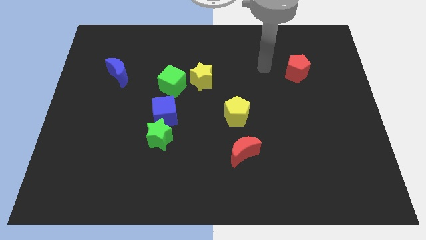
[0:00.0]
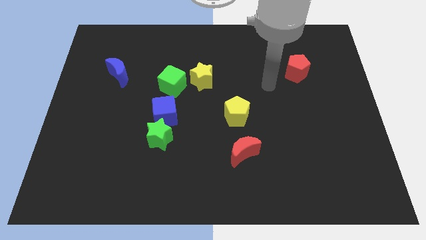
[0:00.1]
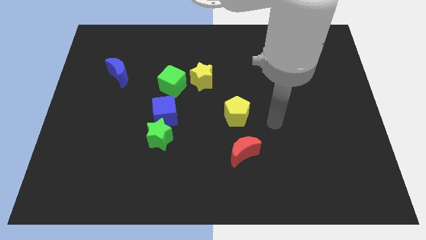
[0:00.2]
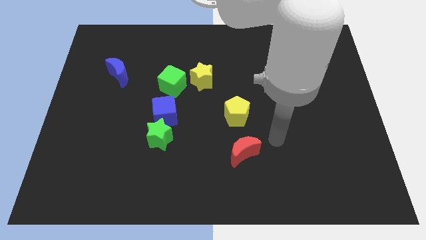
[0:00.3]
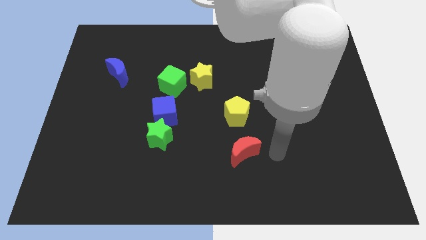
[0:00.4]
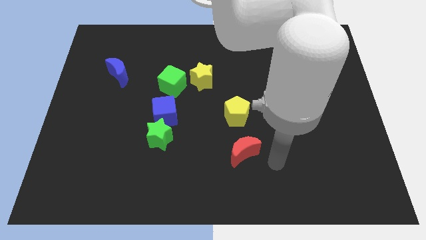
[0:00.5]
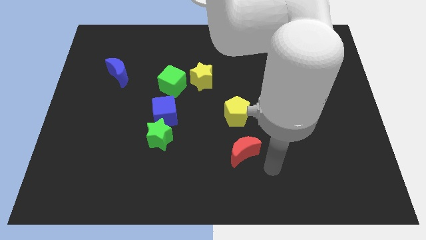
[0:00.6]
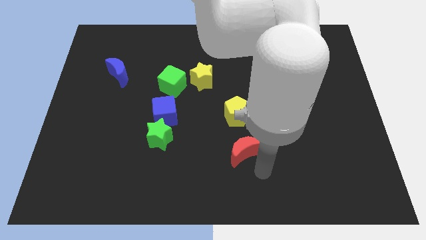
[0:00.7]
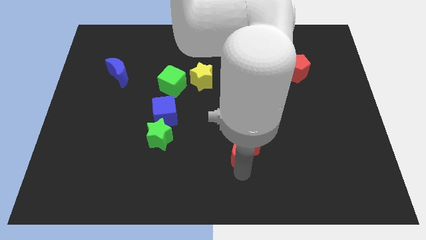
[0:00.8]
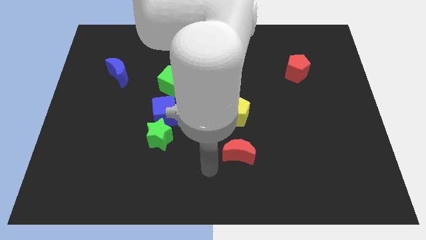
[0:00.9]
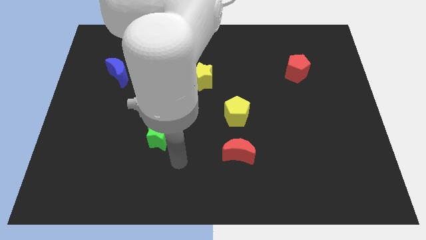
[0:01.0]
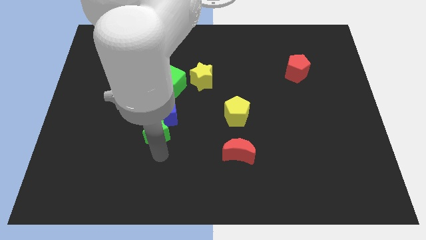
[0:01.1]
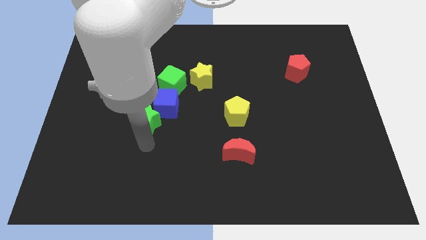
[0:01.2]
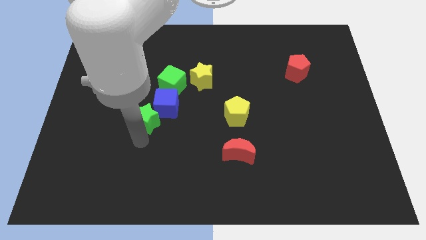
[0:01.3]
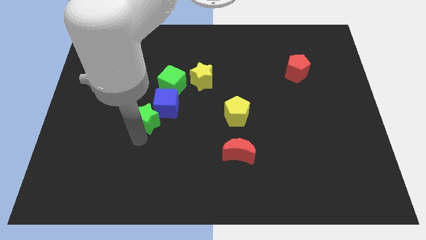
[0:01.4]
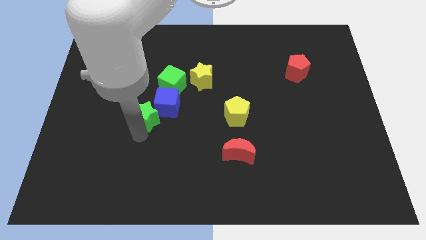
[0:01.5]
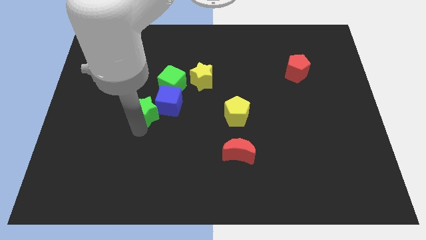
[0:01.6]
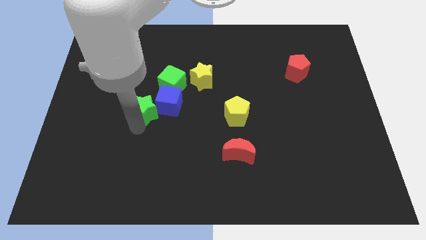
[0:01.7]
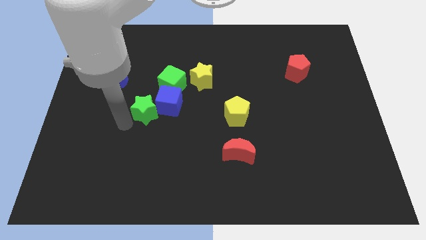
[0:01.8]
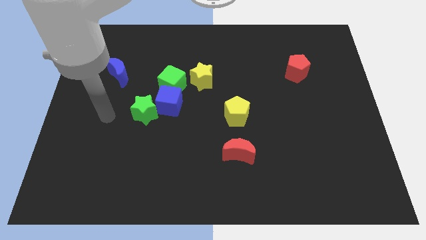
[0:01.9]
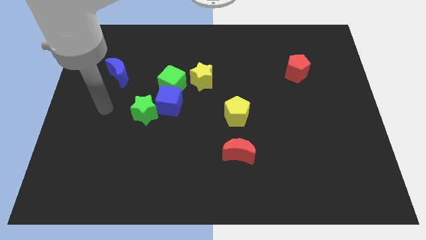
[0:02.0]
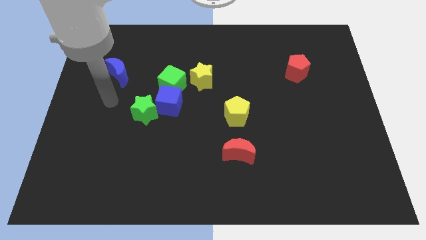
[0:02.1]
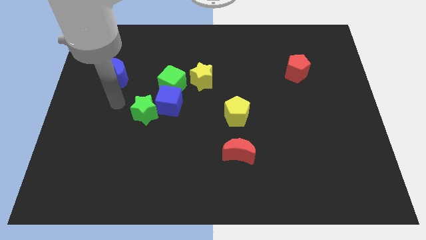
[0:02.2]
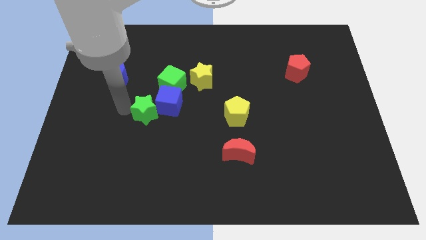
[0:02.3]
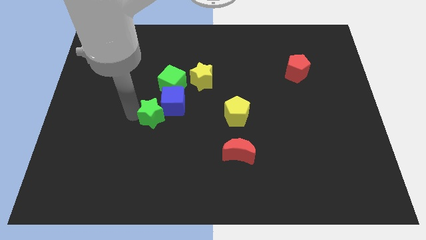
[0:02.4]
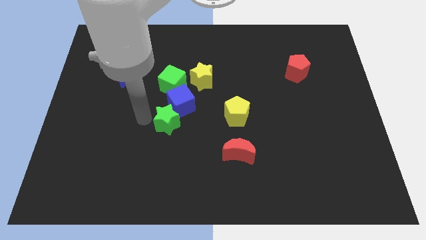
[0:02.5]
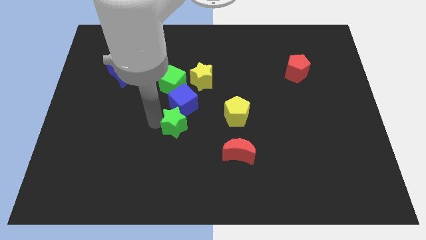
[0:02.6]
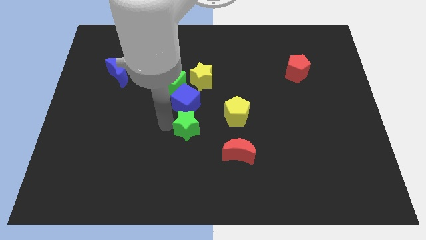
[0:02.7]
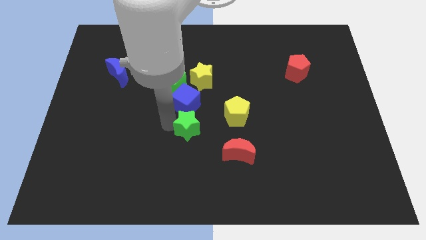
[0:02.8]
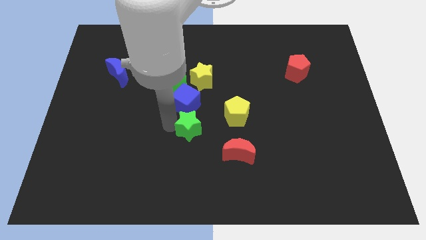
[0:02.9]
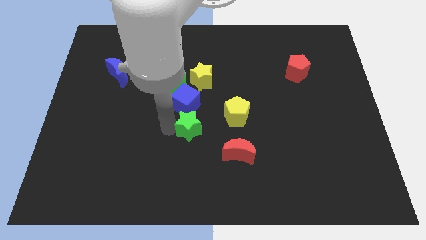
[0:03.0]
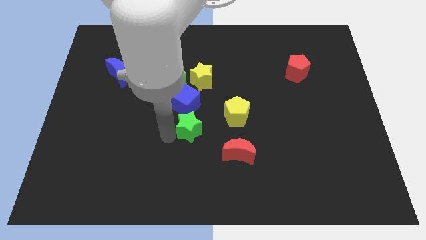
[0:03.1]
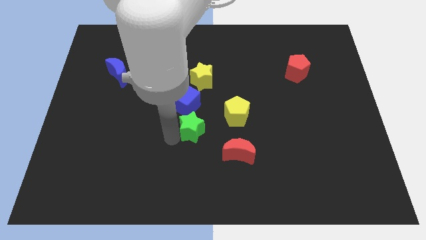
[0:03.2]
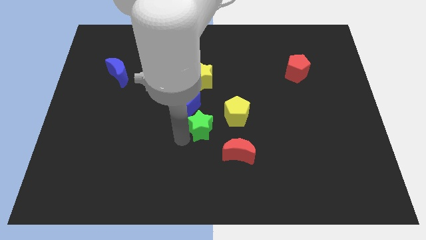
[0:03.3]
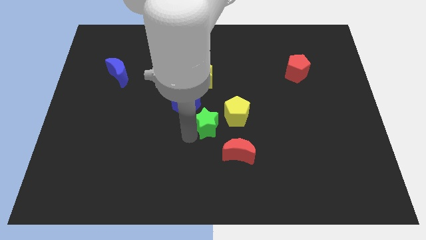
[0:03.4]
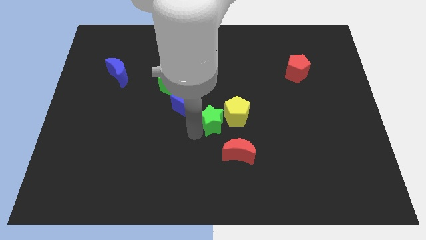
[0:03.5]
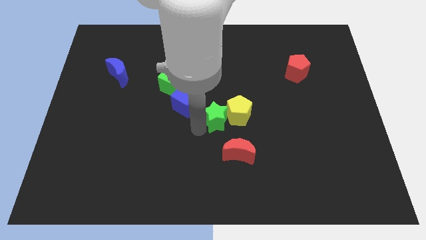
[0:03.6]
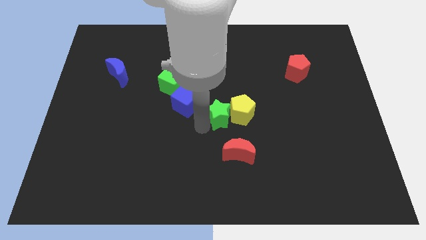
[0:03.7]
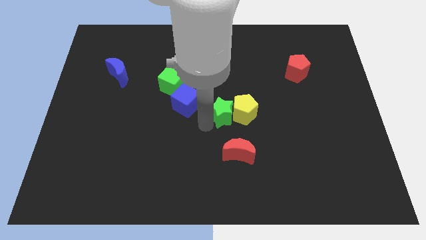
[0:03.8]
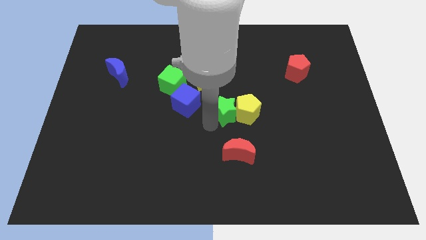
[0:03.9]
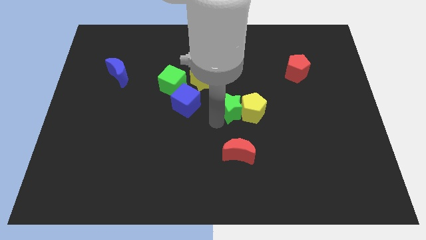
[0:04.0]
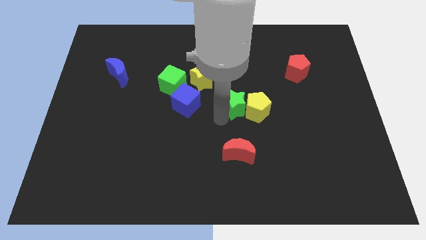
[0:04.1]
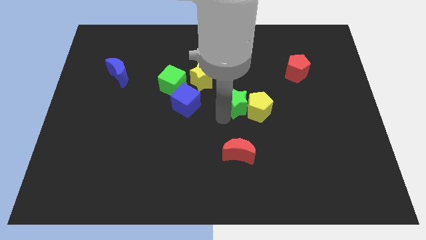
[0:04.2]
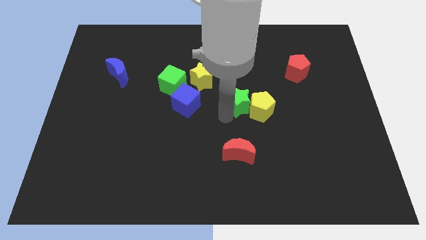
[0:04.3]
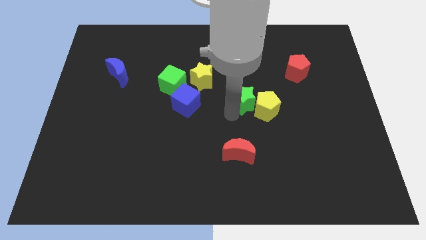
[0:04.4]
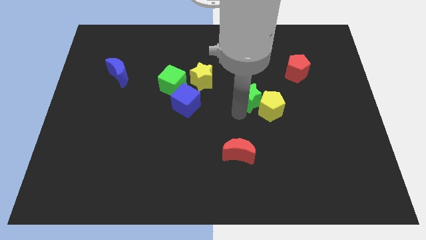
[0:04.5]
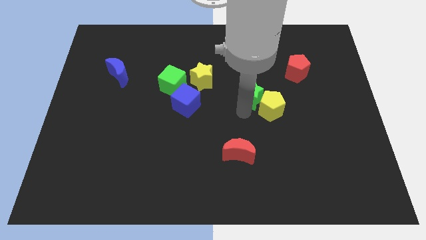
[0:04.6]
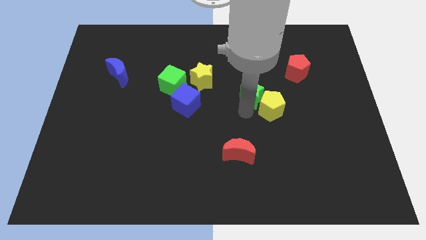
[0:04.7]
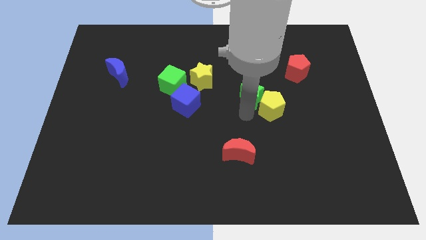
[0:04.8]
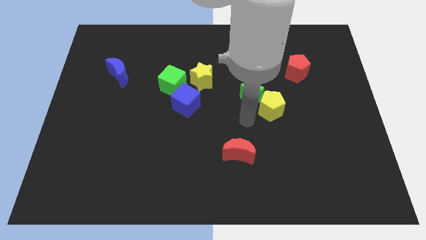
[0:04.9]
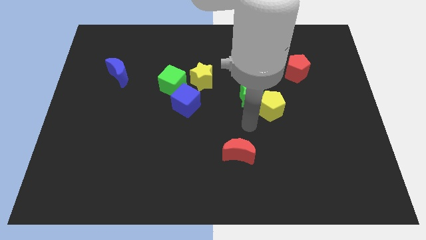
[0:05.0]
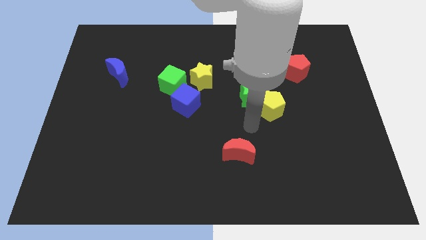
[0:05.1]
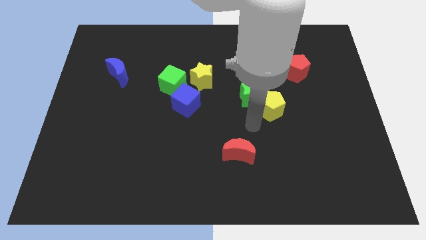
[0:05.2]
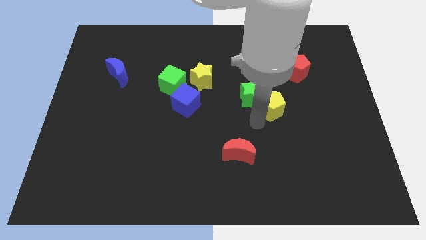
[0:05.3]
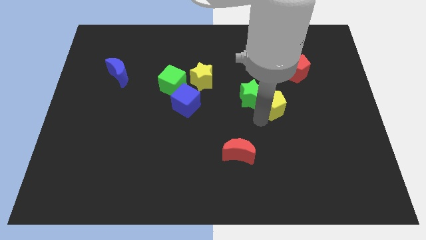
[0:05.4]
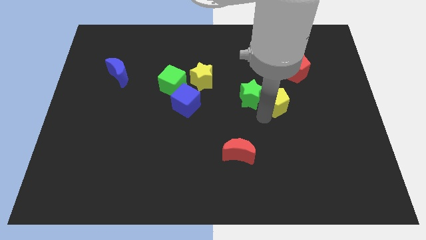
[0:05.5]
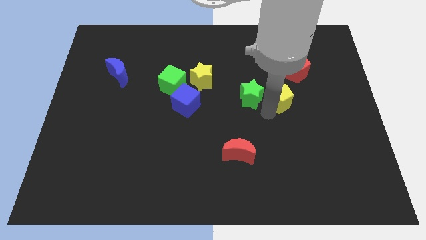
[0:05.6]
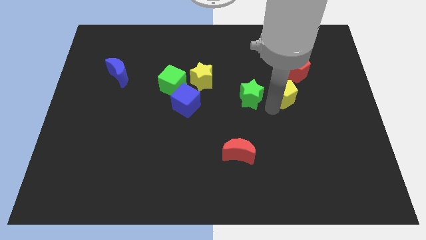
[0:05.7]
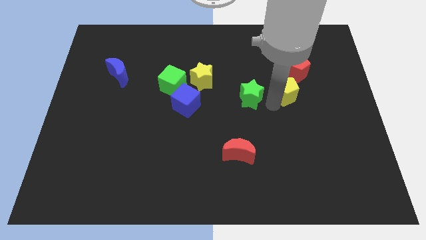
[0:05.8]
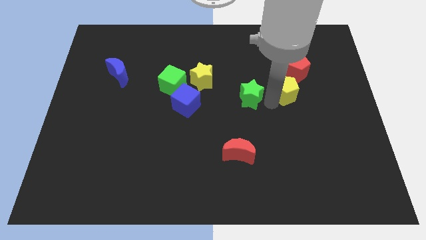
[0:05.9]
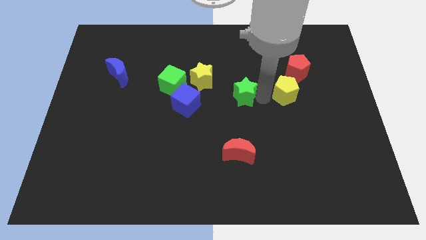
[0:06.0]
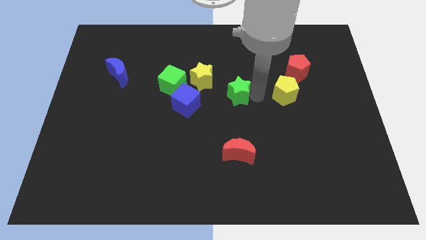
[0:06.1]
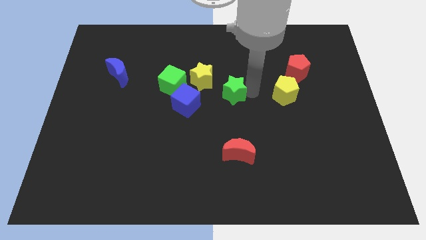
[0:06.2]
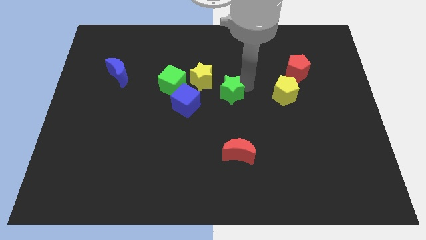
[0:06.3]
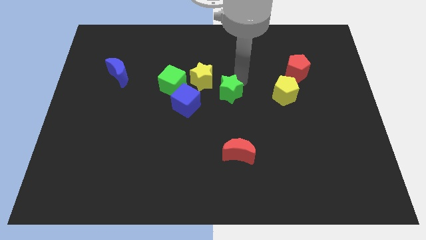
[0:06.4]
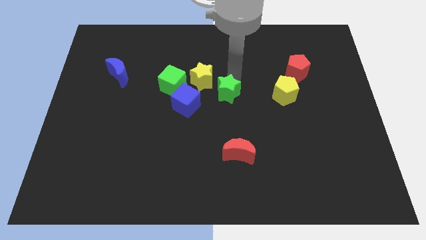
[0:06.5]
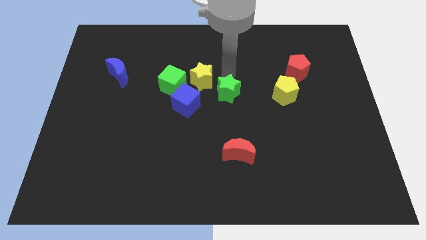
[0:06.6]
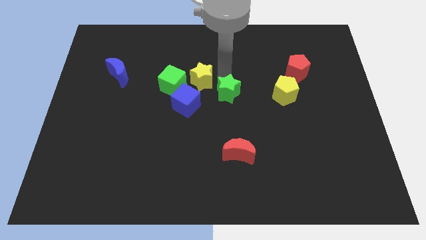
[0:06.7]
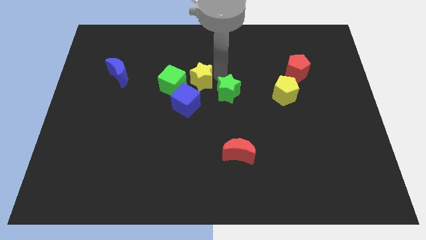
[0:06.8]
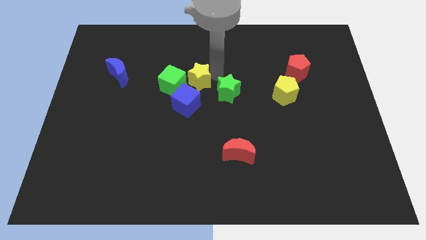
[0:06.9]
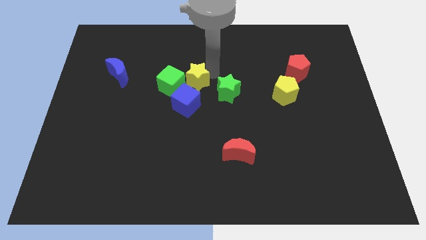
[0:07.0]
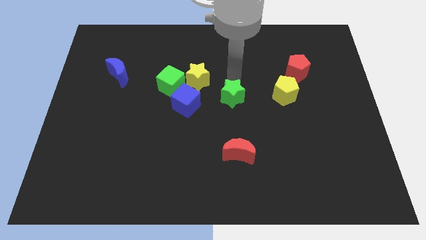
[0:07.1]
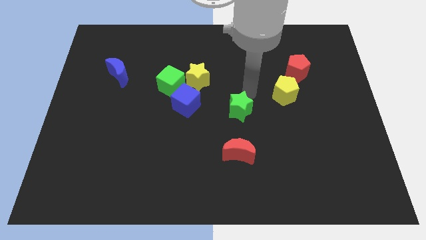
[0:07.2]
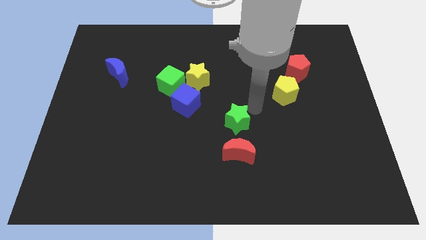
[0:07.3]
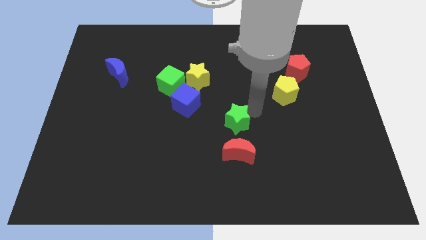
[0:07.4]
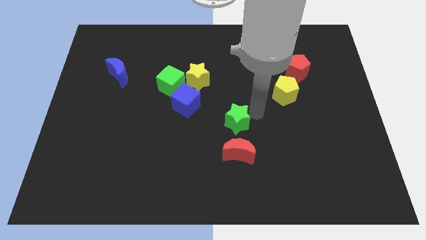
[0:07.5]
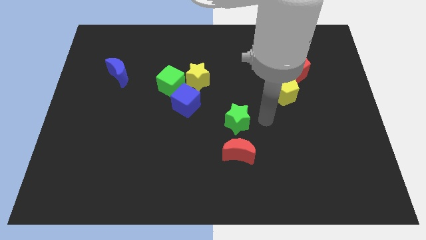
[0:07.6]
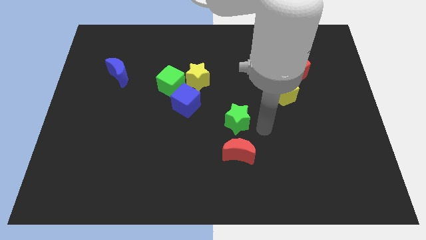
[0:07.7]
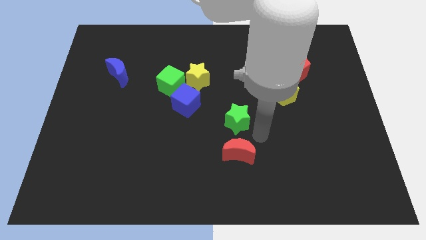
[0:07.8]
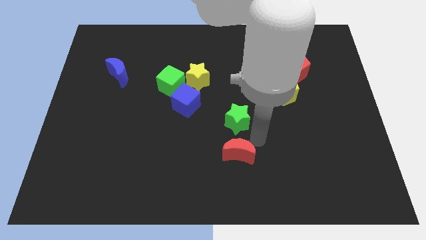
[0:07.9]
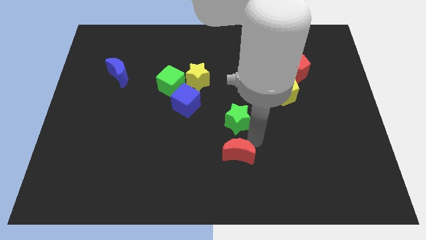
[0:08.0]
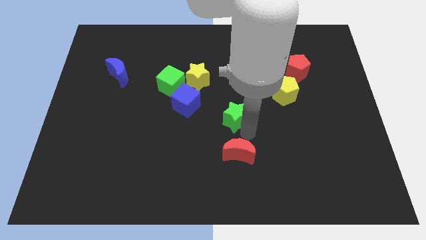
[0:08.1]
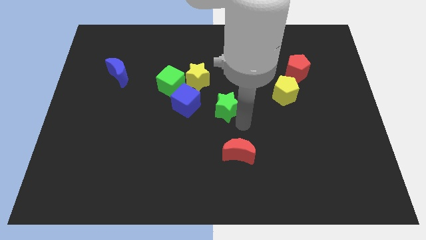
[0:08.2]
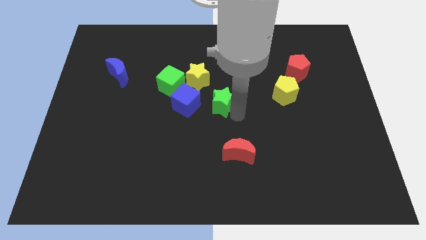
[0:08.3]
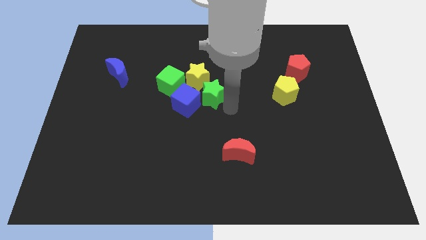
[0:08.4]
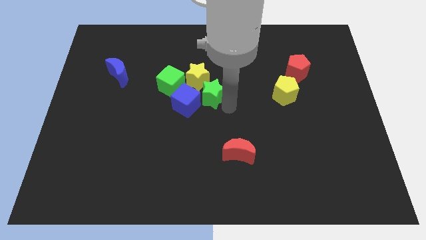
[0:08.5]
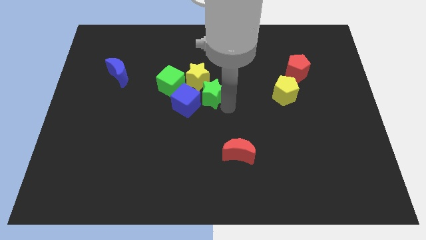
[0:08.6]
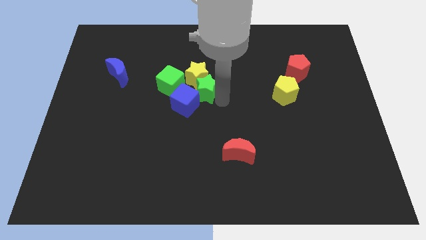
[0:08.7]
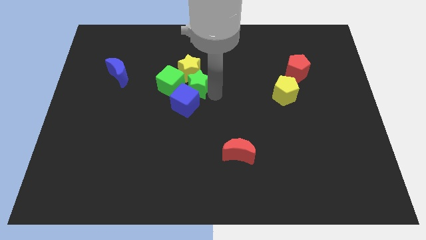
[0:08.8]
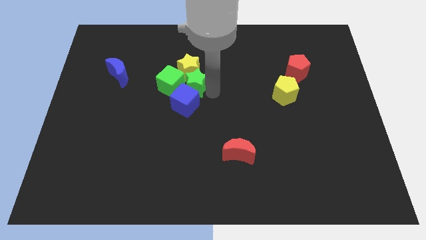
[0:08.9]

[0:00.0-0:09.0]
push the green star towards the yellow star
